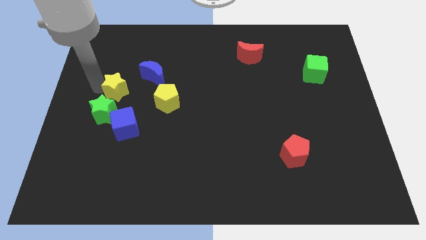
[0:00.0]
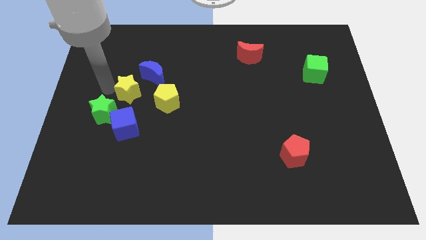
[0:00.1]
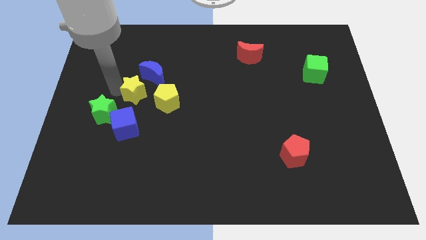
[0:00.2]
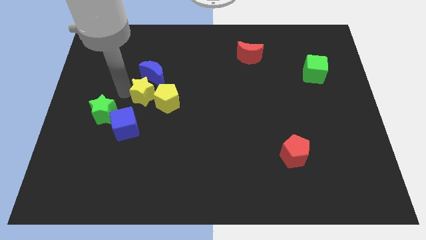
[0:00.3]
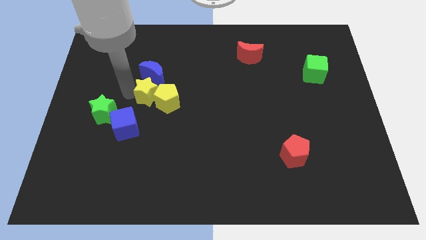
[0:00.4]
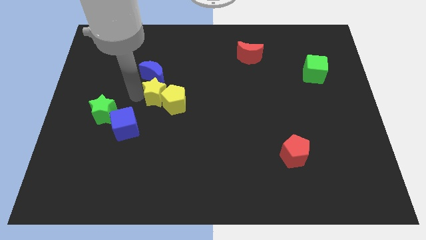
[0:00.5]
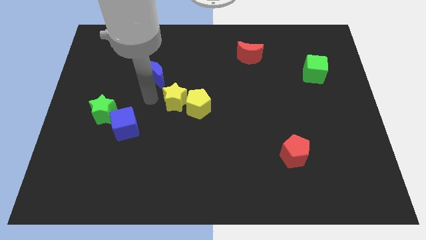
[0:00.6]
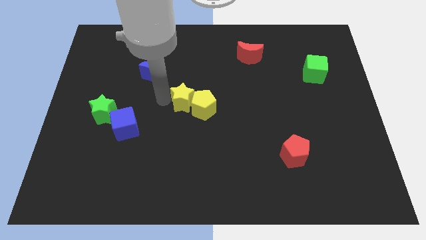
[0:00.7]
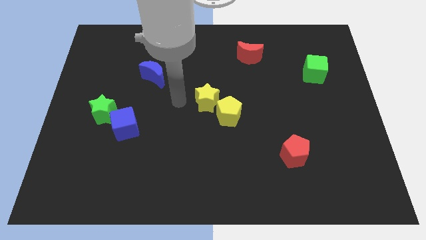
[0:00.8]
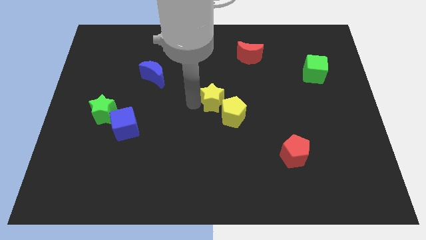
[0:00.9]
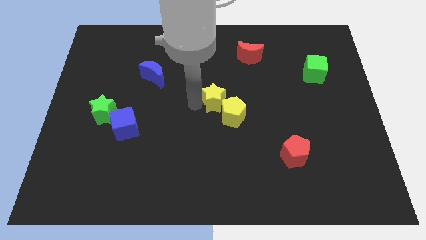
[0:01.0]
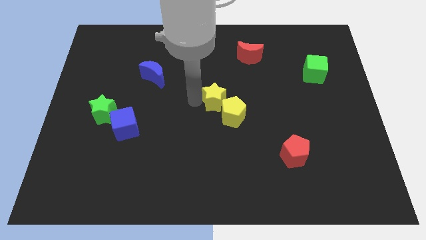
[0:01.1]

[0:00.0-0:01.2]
push the yellow blocks slightly to the right

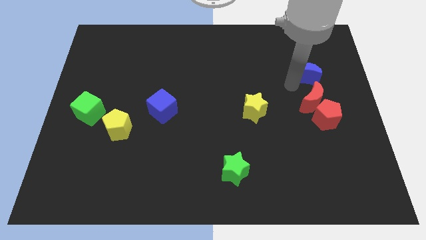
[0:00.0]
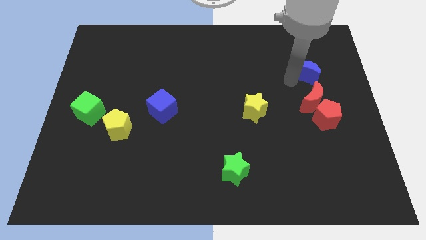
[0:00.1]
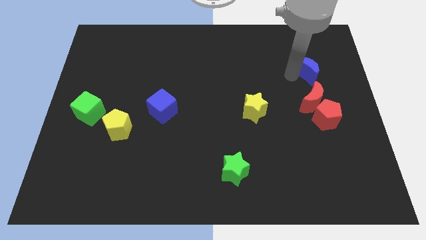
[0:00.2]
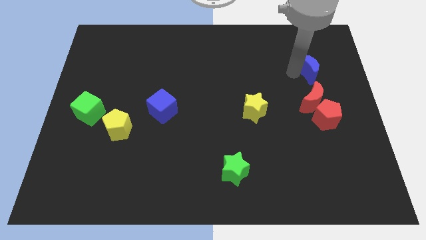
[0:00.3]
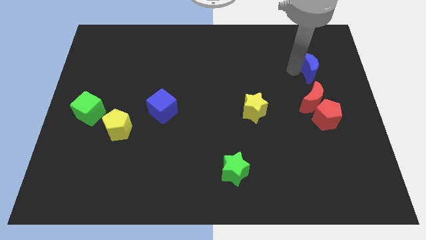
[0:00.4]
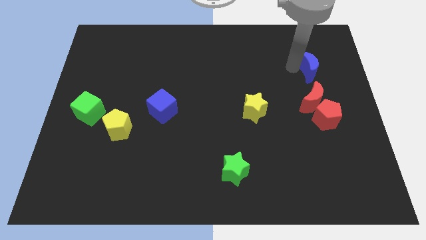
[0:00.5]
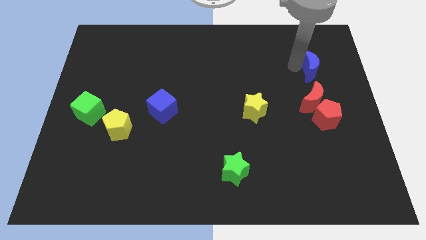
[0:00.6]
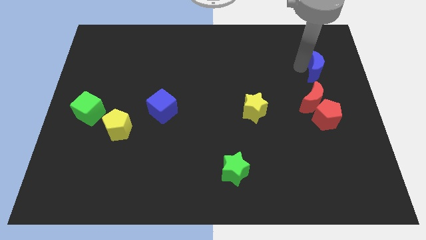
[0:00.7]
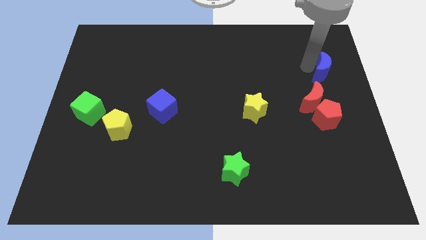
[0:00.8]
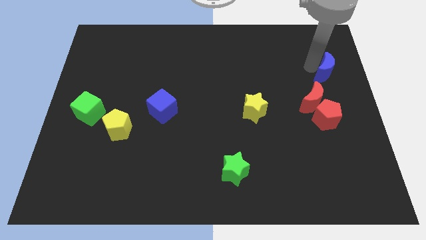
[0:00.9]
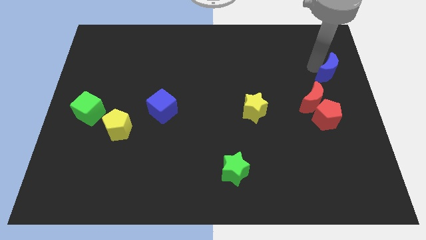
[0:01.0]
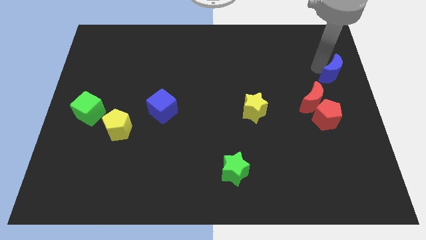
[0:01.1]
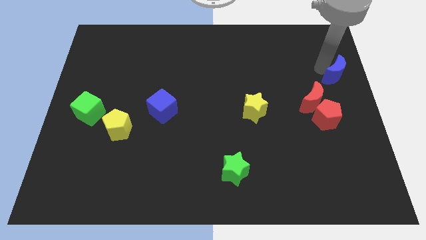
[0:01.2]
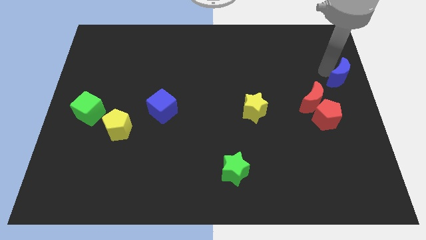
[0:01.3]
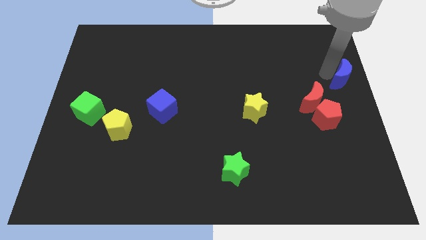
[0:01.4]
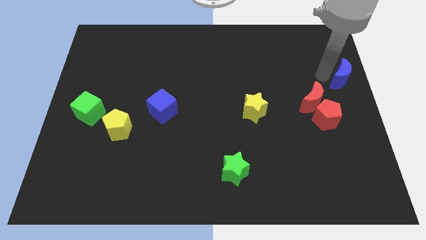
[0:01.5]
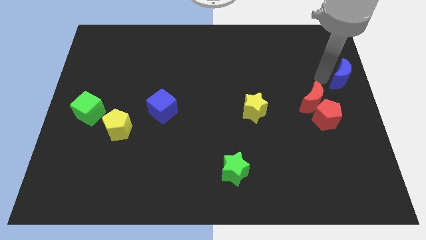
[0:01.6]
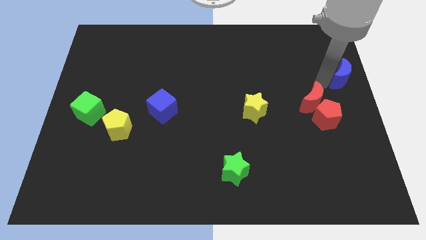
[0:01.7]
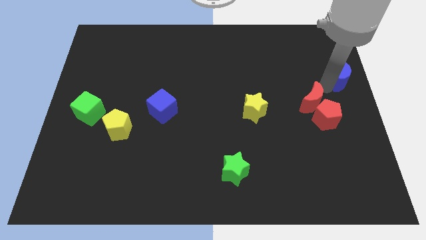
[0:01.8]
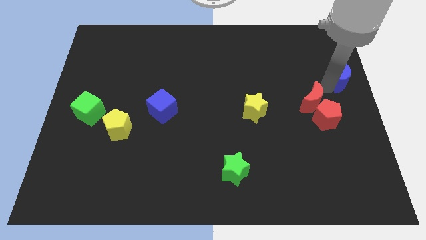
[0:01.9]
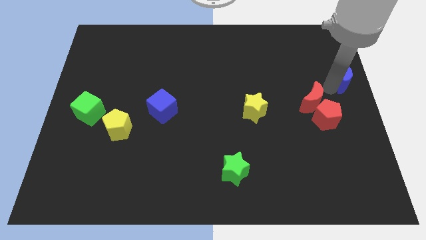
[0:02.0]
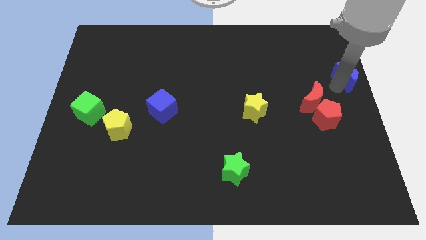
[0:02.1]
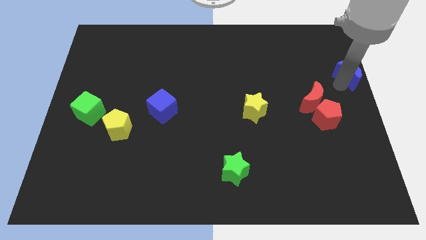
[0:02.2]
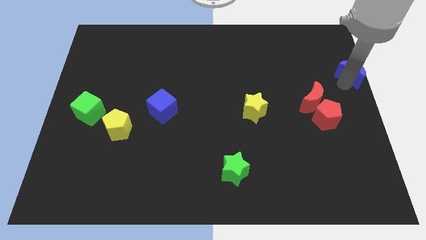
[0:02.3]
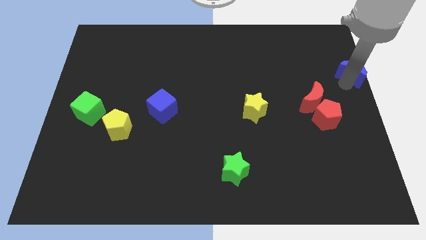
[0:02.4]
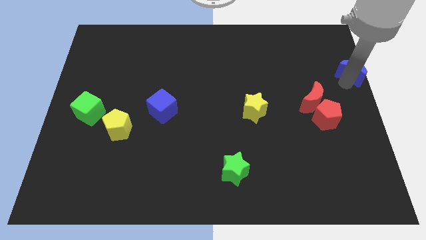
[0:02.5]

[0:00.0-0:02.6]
move blue crescent to the top right side

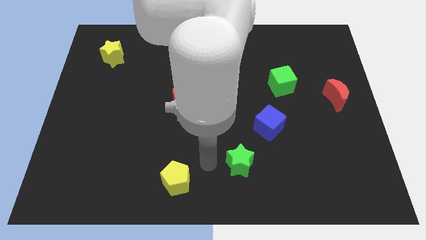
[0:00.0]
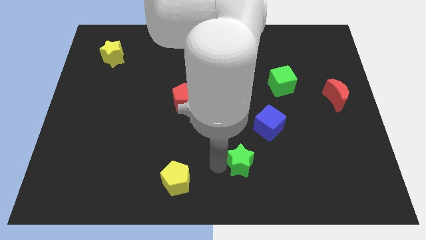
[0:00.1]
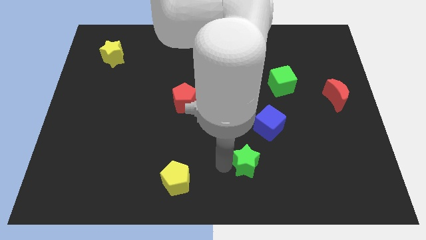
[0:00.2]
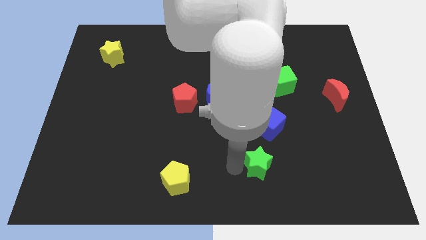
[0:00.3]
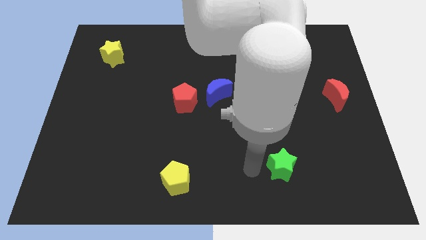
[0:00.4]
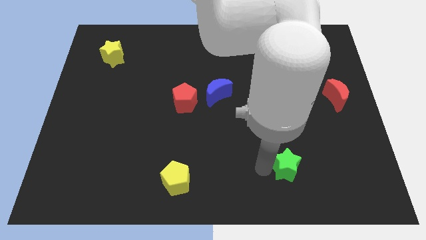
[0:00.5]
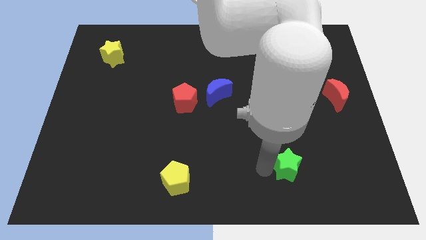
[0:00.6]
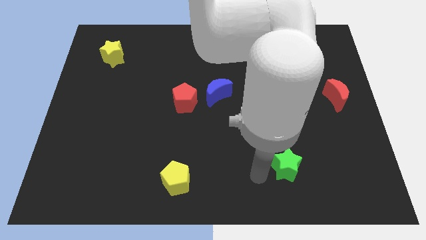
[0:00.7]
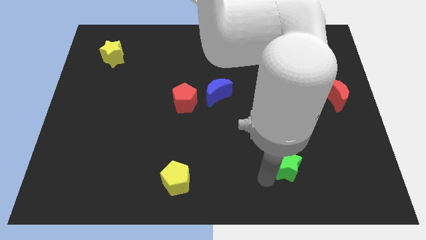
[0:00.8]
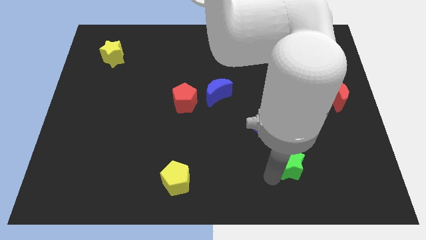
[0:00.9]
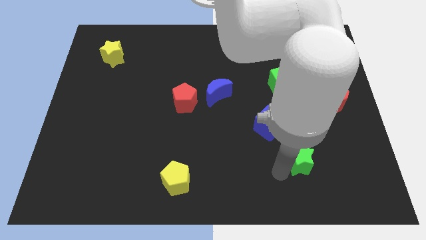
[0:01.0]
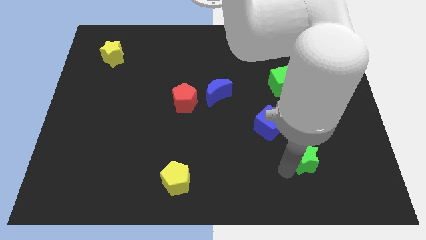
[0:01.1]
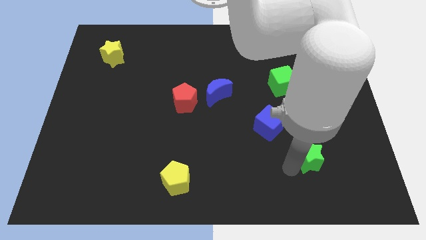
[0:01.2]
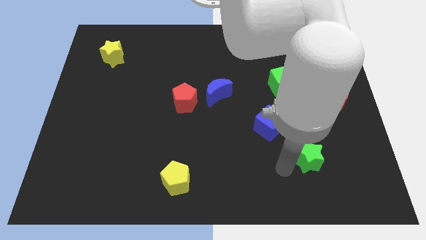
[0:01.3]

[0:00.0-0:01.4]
push the green star slightly to the right side to the board

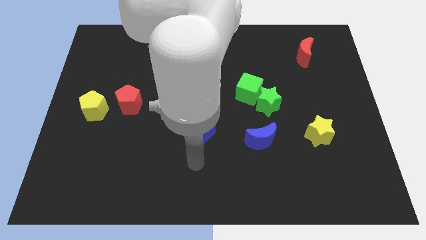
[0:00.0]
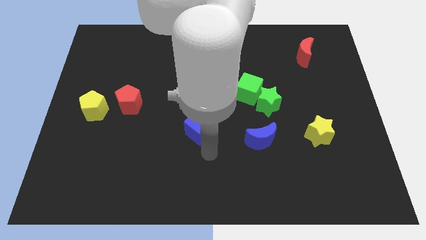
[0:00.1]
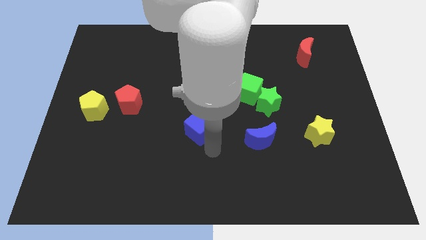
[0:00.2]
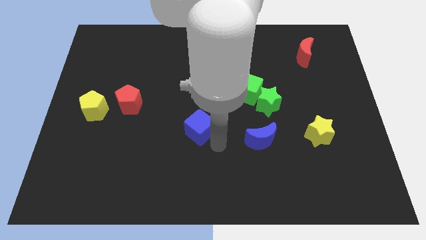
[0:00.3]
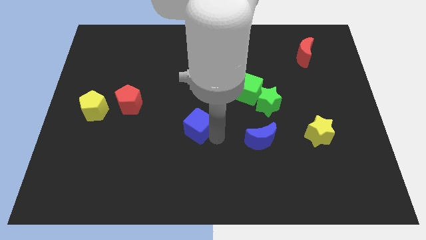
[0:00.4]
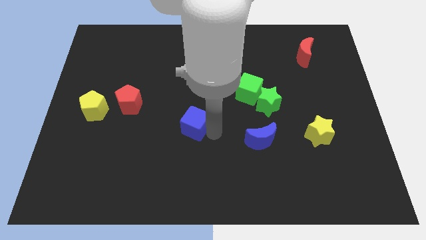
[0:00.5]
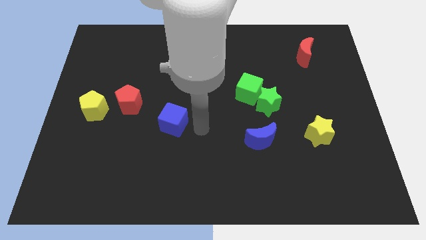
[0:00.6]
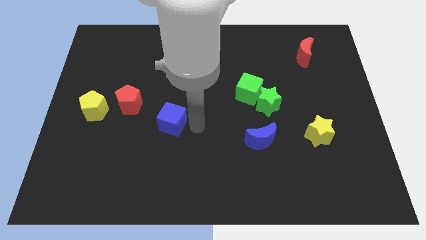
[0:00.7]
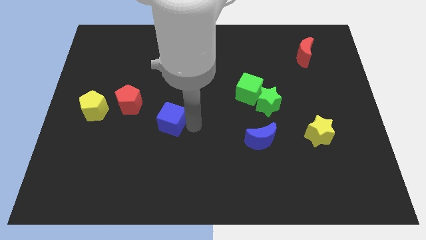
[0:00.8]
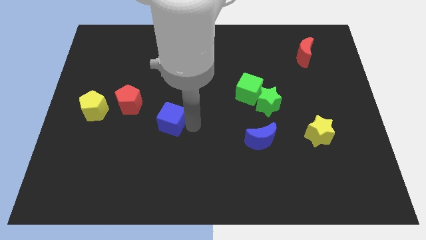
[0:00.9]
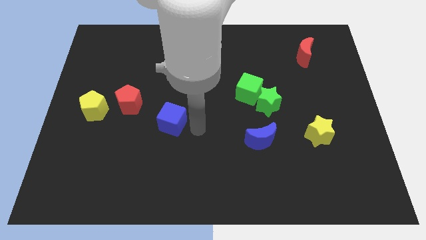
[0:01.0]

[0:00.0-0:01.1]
slightly push the blue cube near the red pentagon

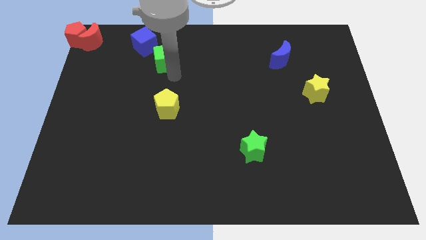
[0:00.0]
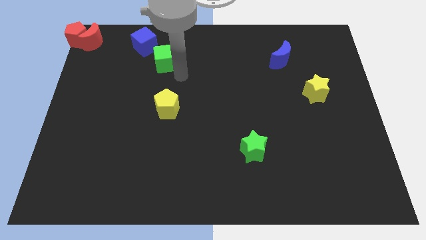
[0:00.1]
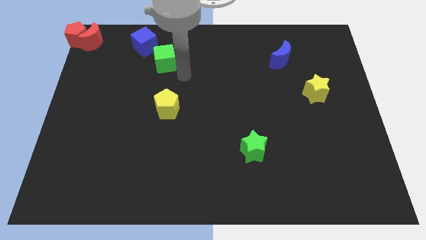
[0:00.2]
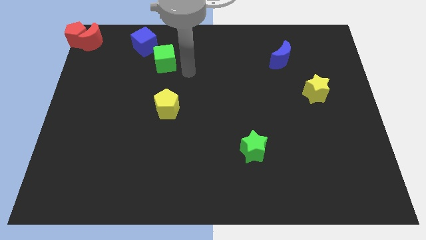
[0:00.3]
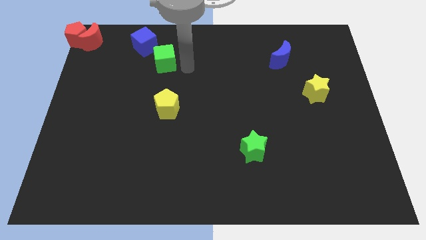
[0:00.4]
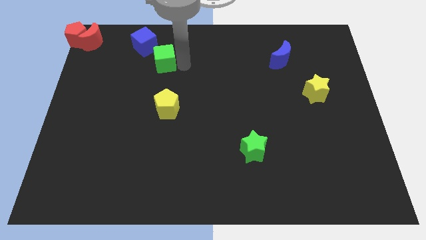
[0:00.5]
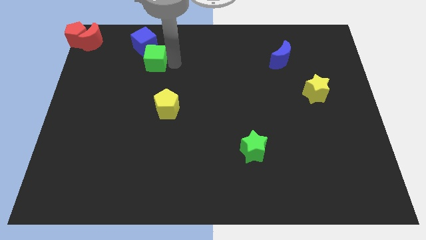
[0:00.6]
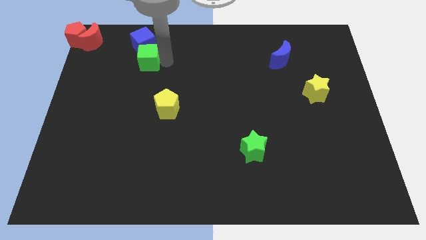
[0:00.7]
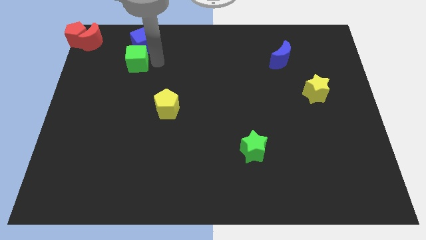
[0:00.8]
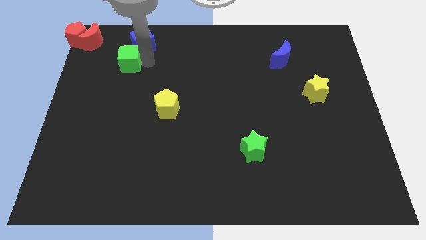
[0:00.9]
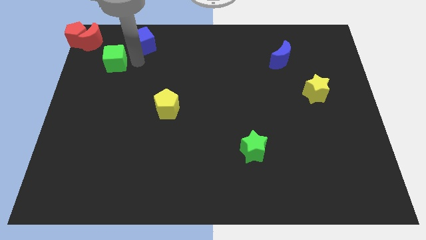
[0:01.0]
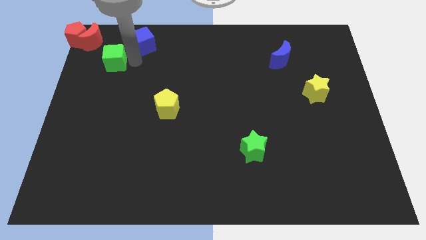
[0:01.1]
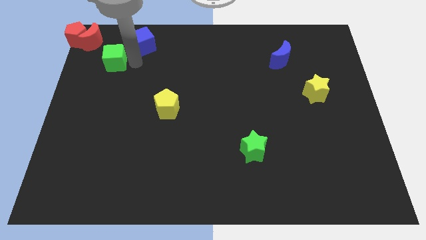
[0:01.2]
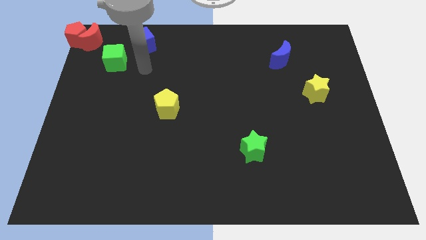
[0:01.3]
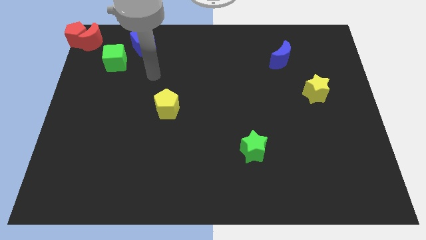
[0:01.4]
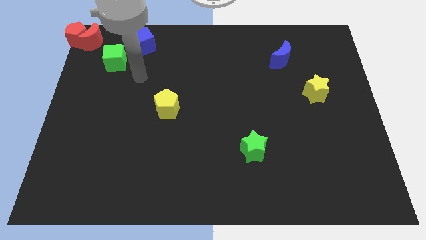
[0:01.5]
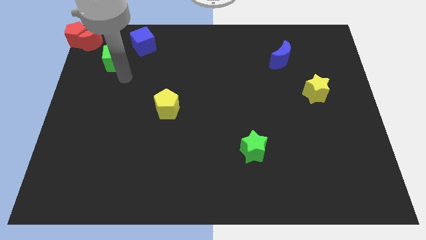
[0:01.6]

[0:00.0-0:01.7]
move the green cube diagonally top left to the yellow pentagon

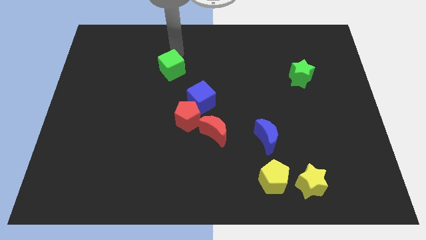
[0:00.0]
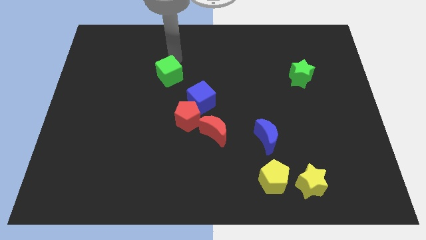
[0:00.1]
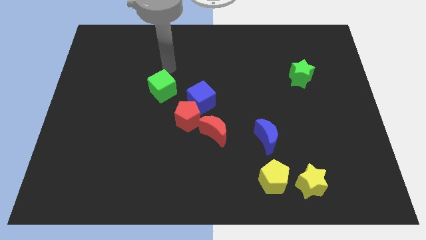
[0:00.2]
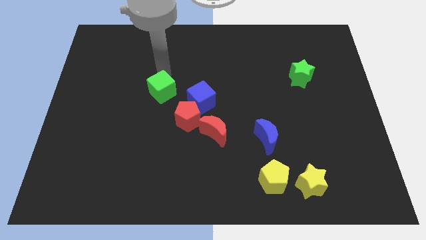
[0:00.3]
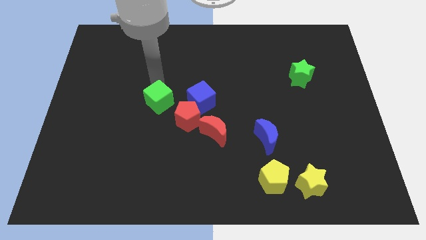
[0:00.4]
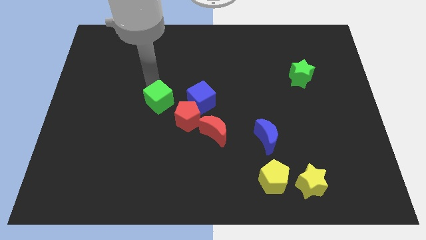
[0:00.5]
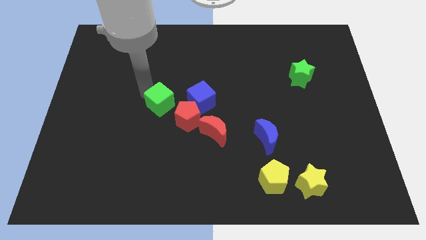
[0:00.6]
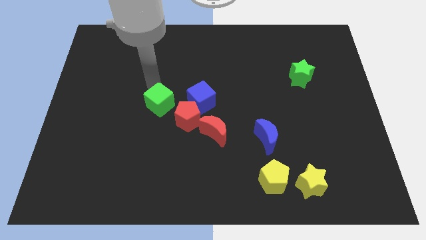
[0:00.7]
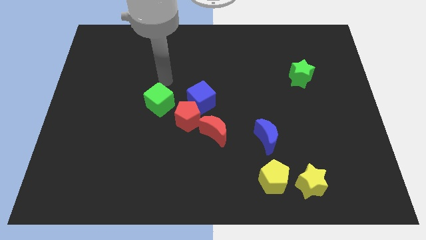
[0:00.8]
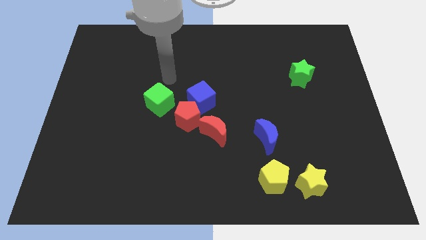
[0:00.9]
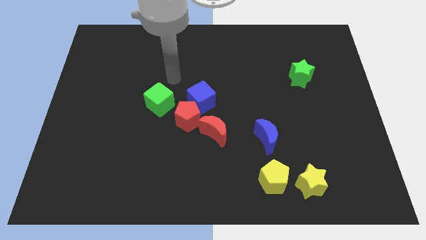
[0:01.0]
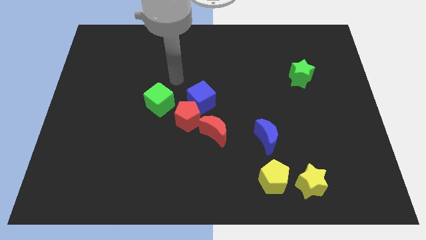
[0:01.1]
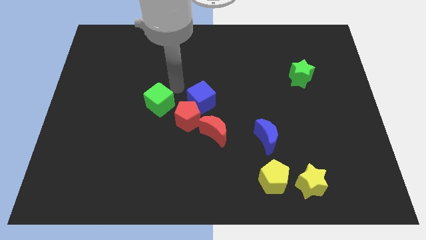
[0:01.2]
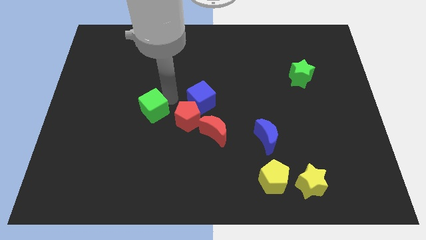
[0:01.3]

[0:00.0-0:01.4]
place the green cube to the right side of the blue cube
